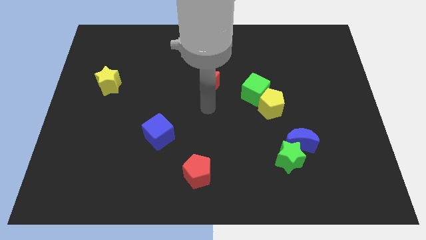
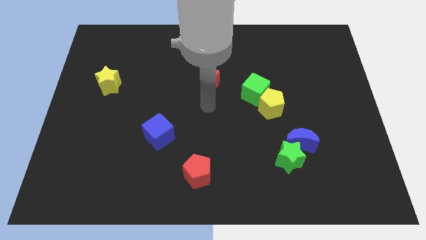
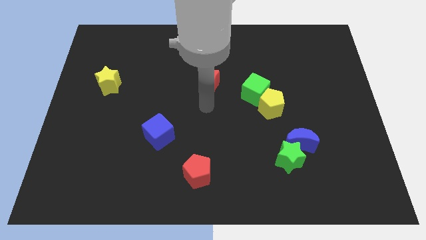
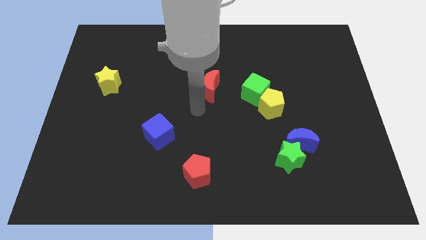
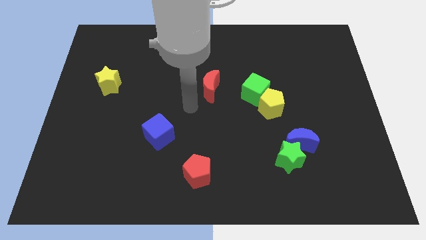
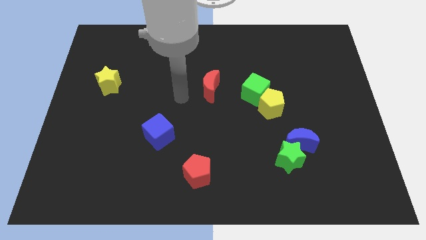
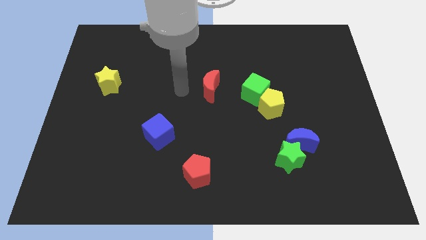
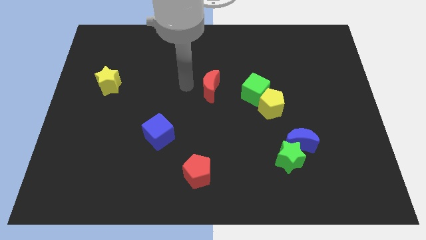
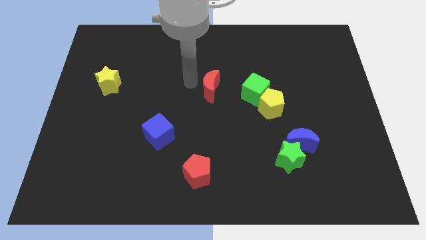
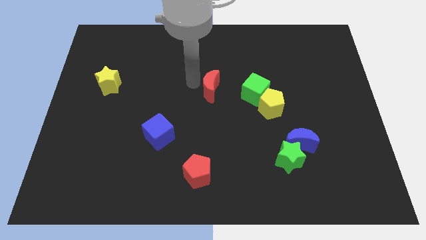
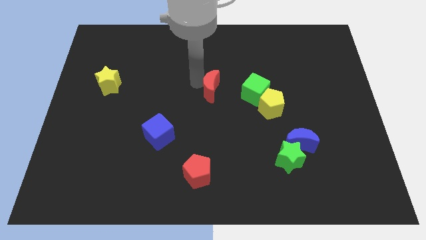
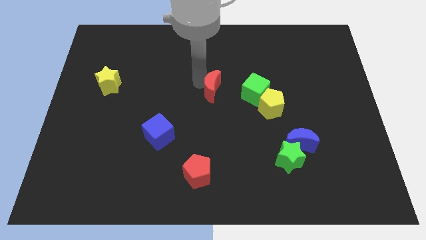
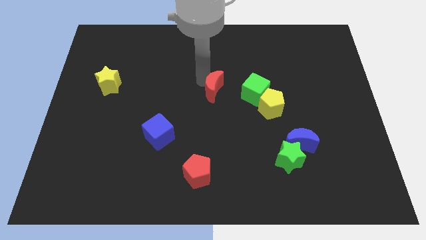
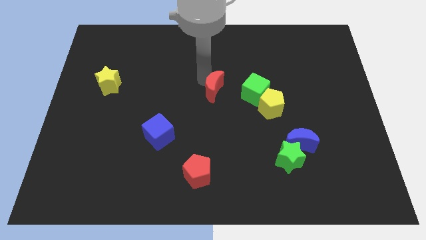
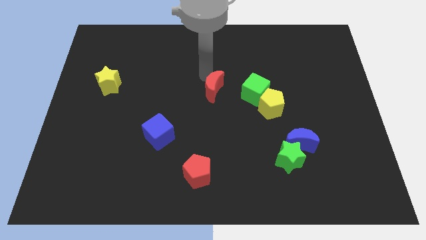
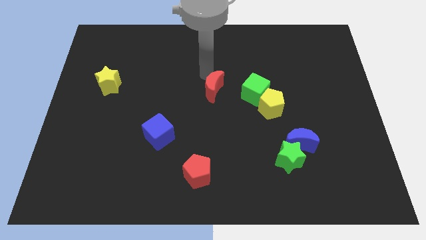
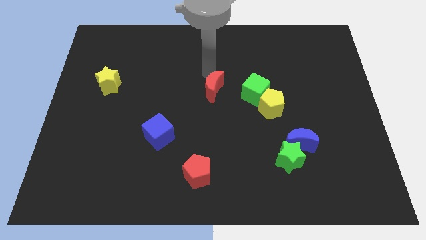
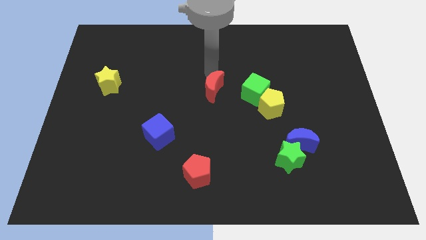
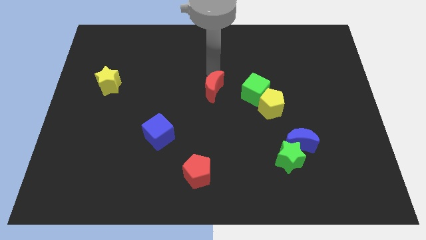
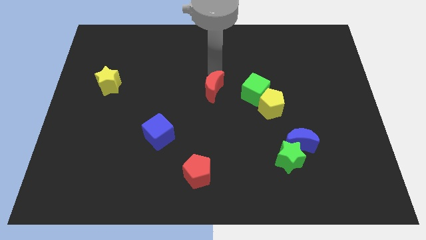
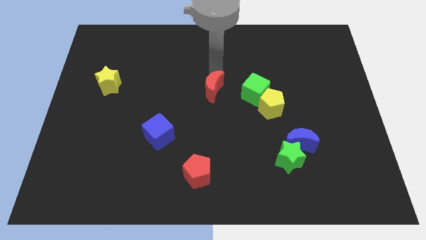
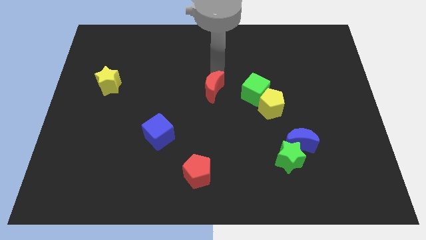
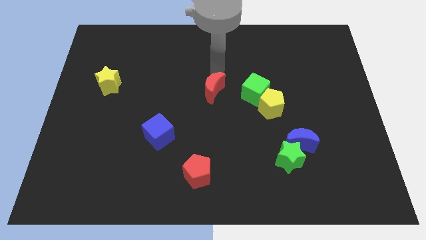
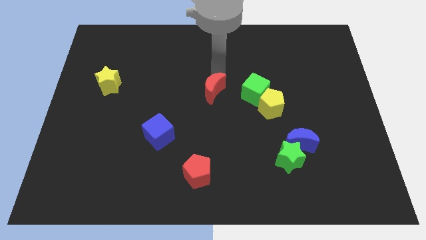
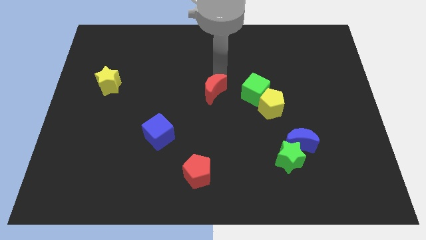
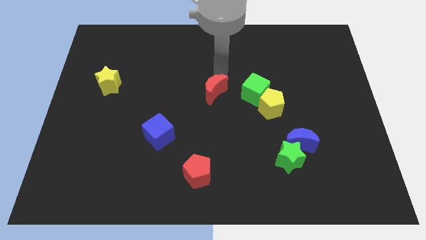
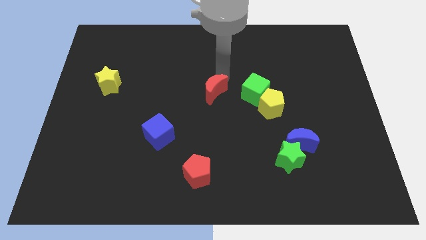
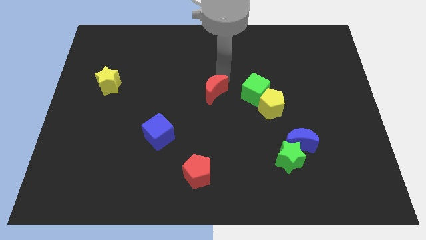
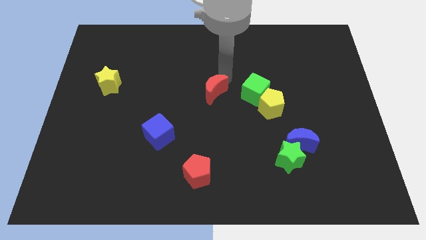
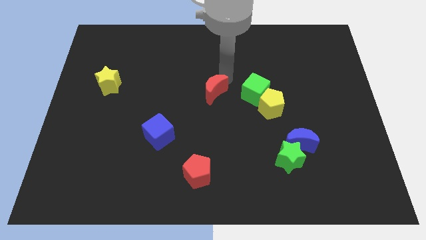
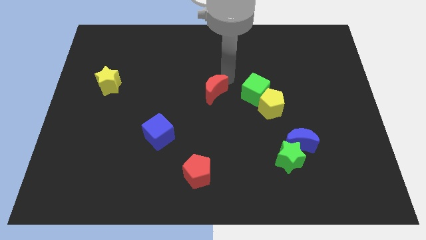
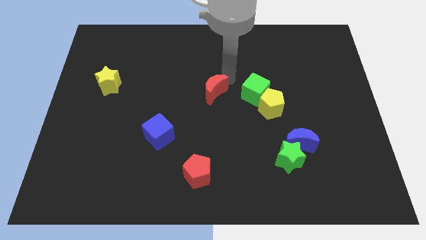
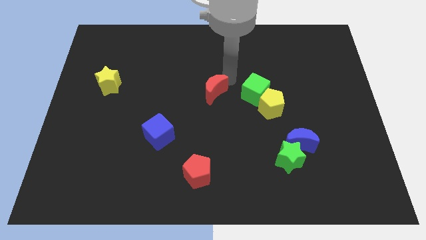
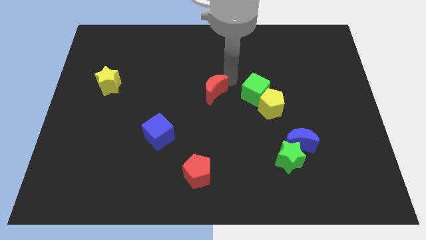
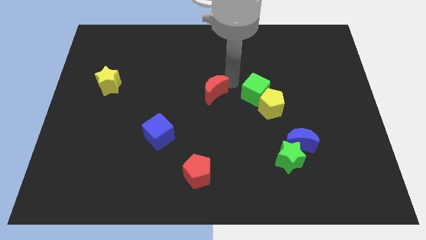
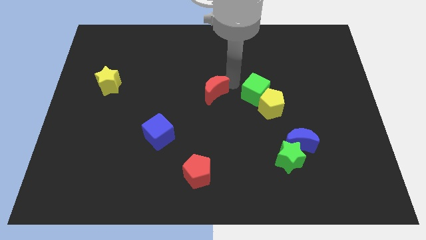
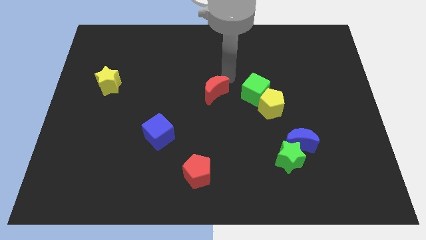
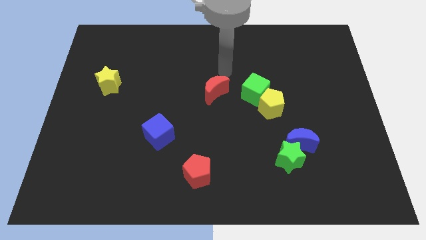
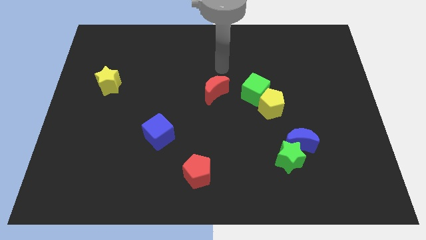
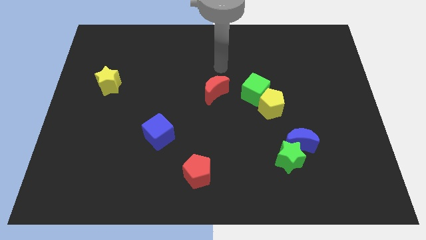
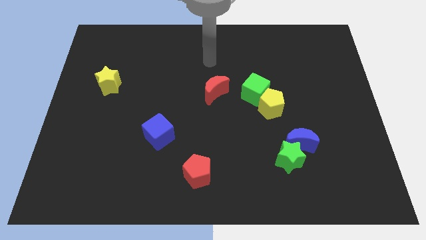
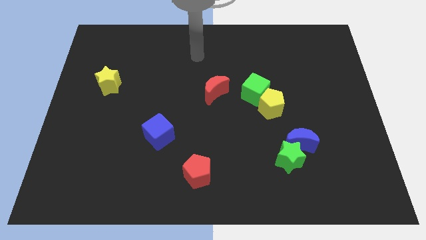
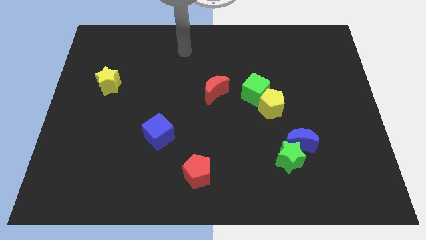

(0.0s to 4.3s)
turn the red moon towards the green cube

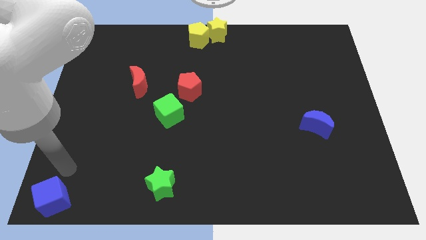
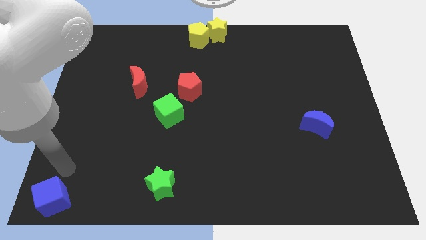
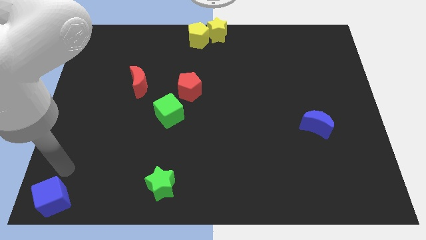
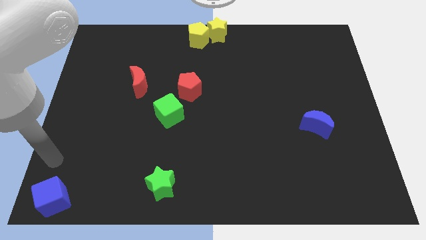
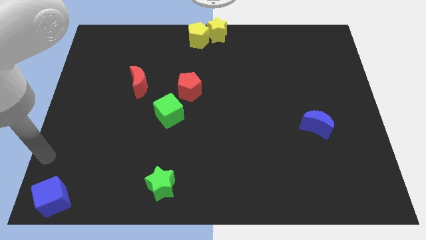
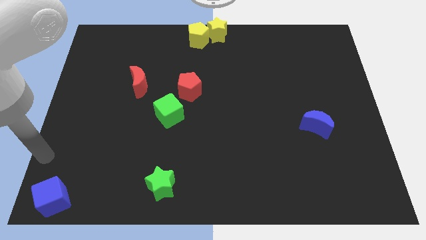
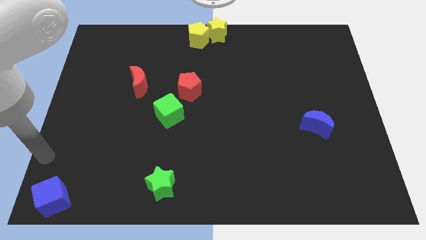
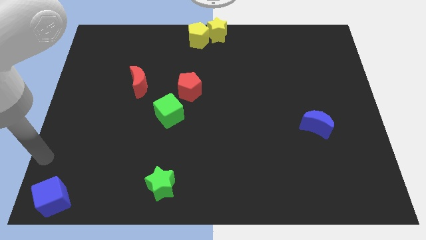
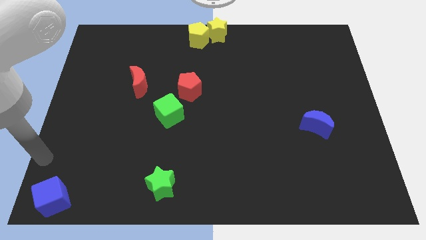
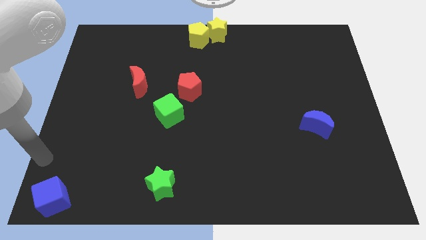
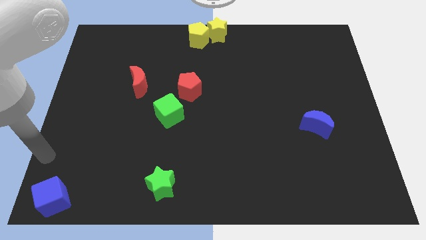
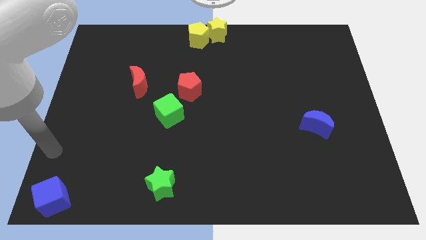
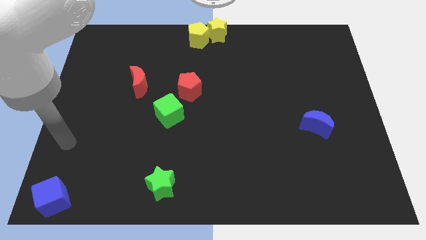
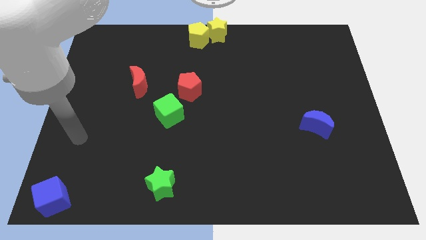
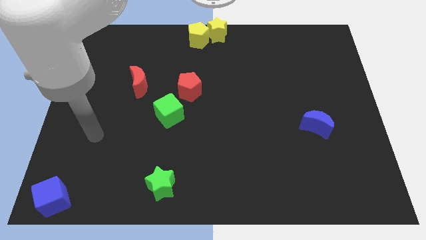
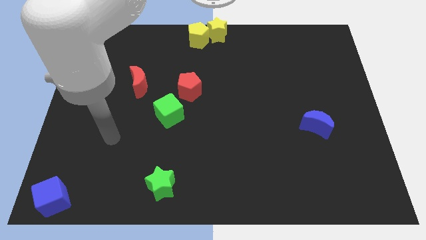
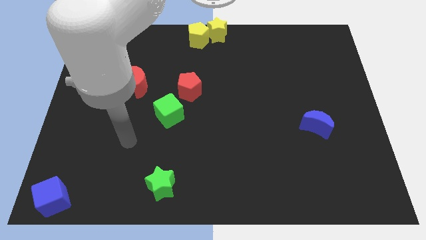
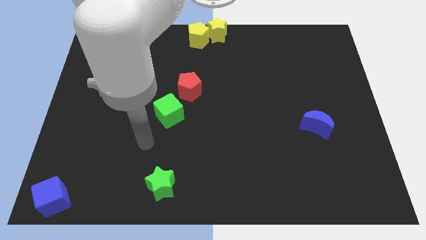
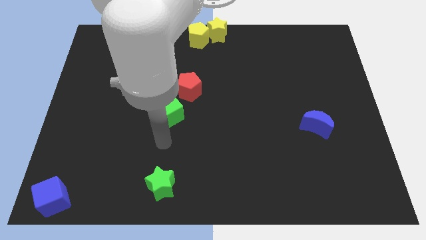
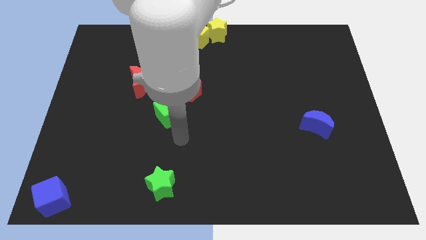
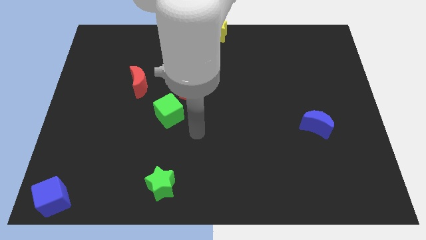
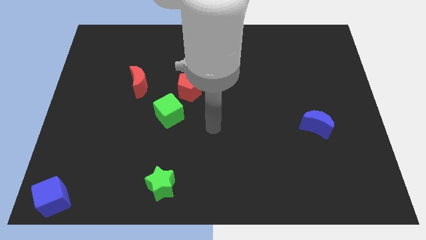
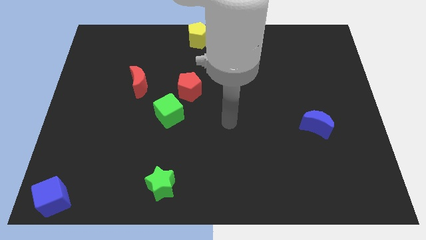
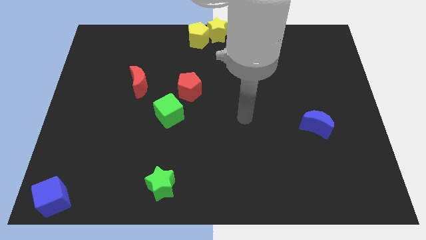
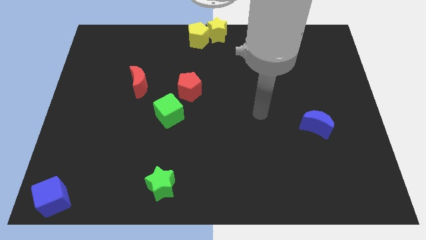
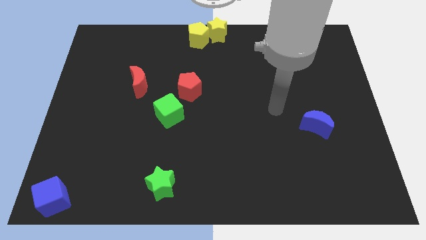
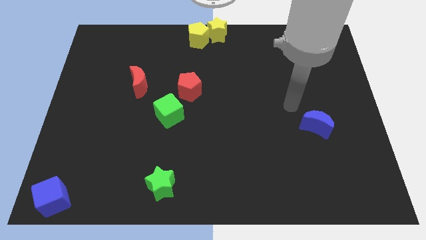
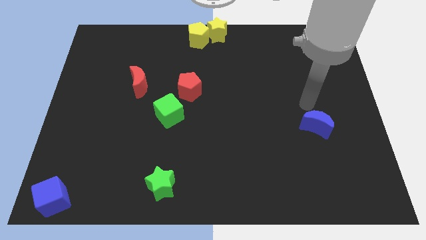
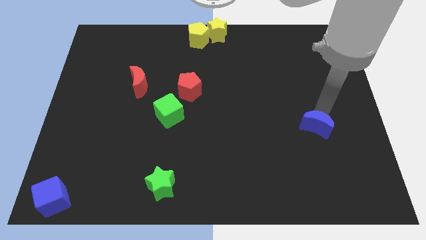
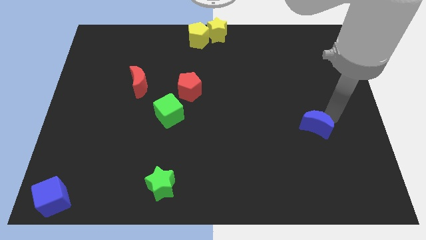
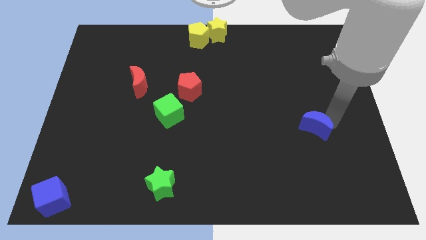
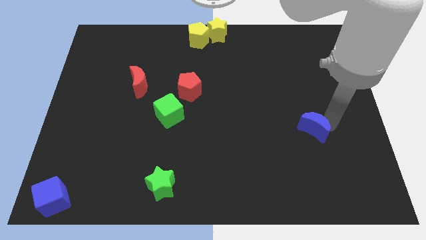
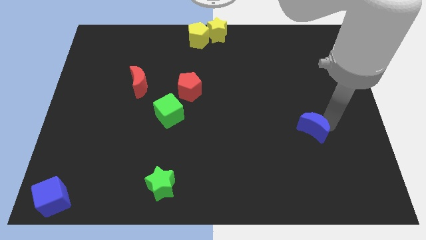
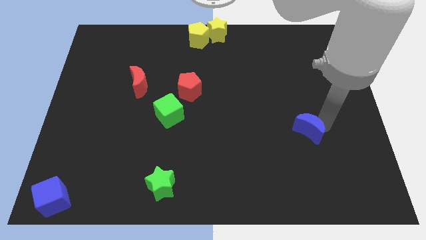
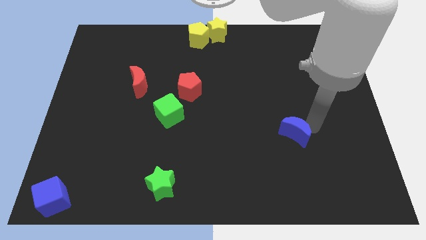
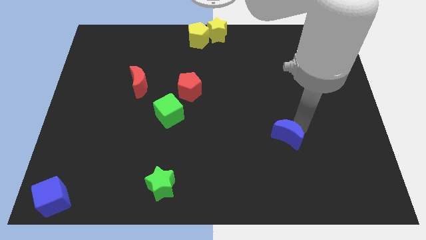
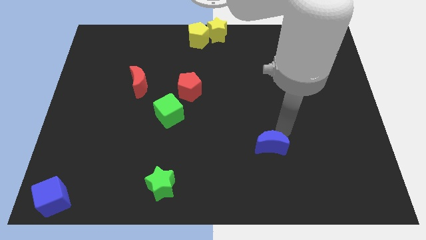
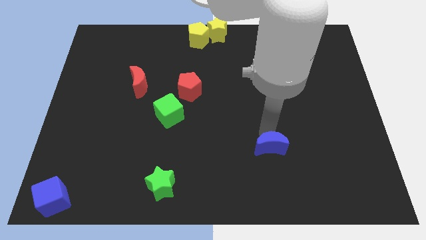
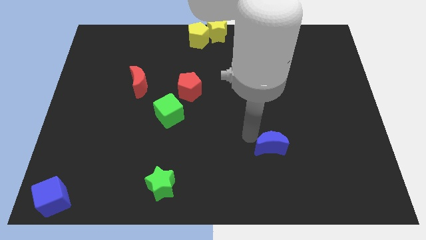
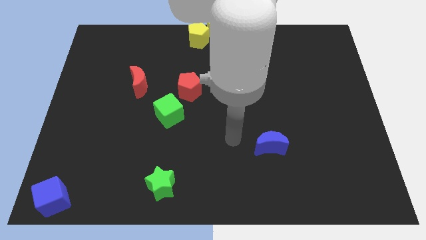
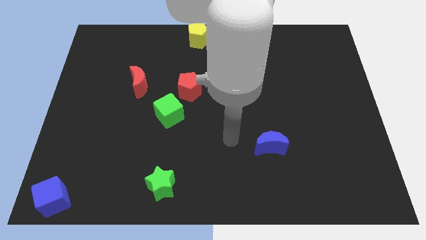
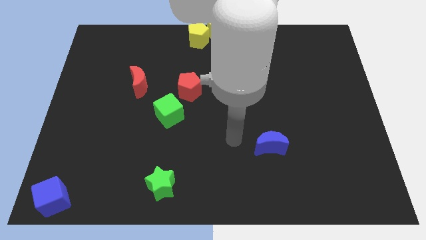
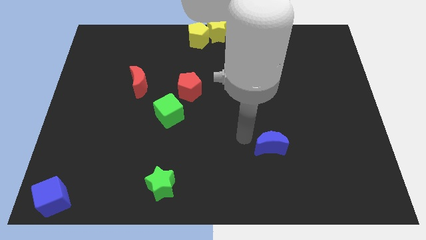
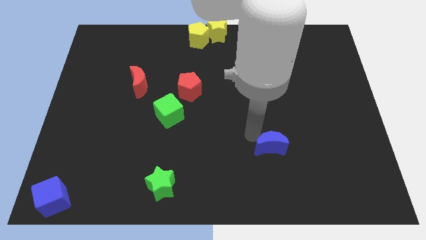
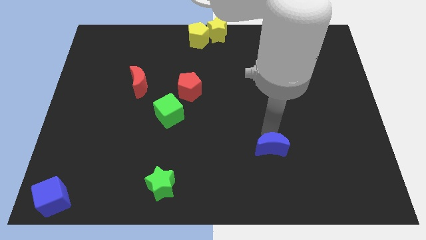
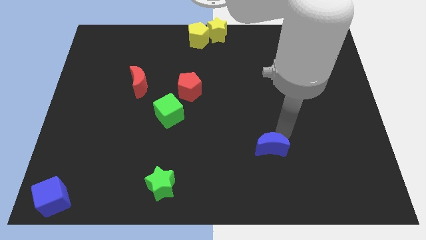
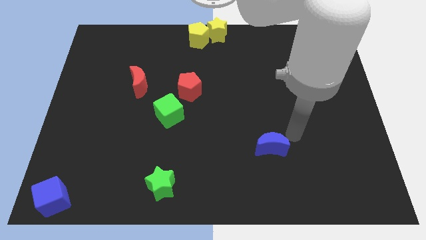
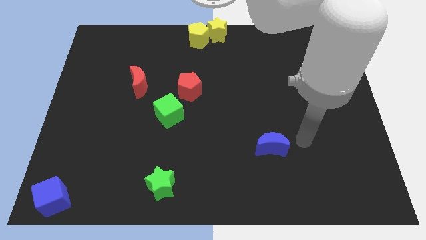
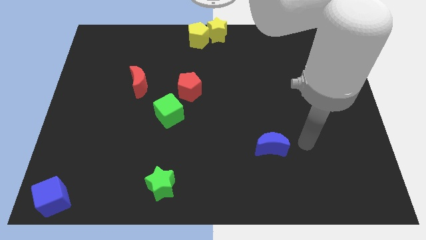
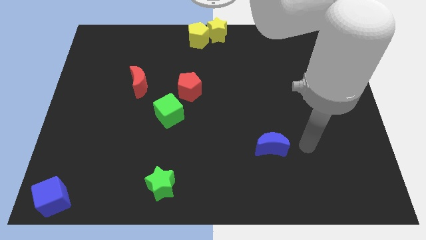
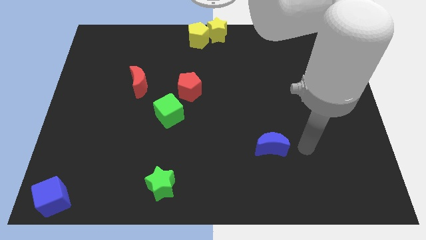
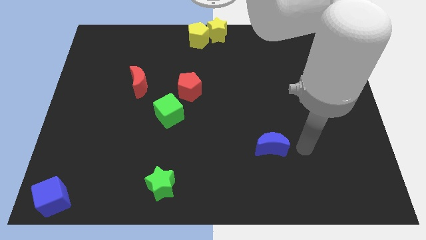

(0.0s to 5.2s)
move the blue moon slightly towards the bottom side
